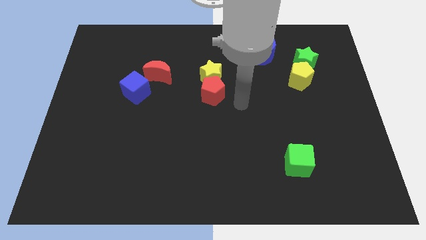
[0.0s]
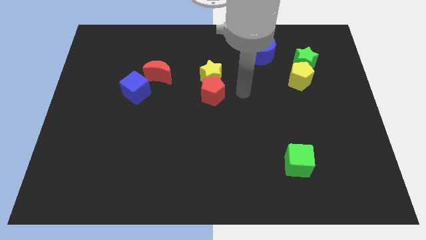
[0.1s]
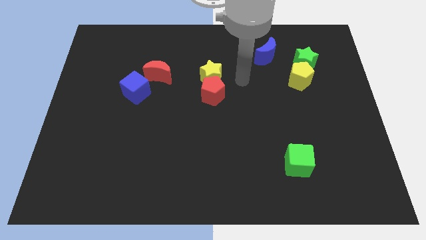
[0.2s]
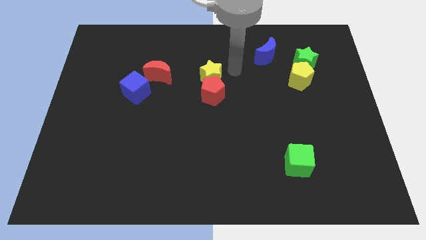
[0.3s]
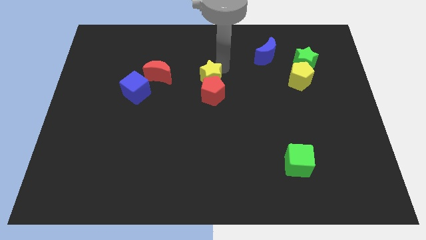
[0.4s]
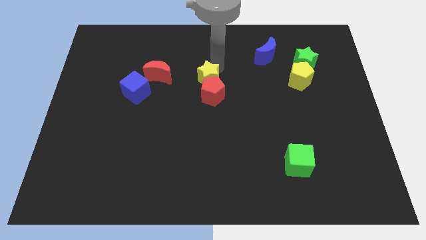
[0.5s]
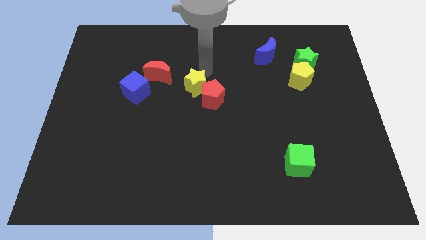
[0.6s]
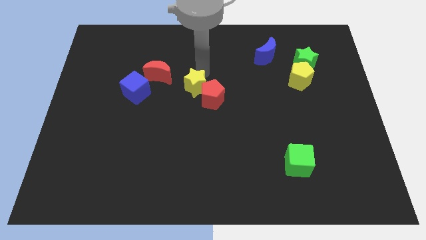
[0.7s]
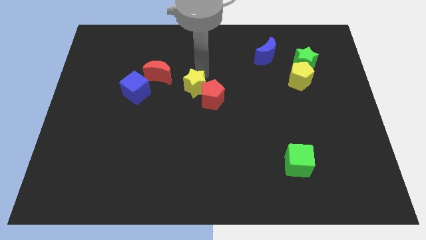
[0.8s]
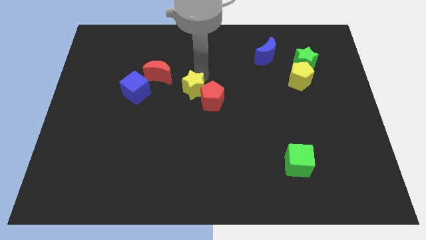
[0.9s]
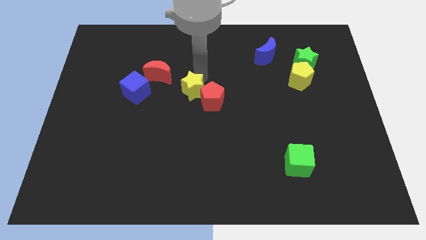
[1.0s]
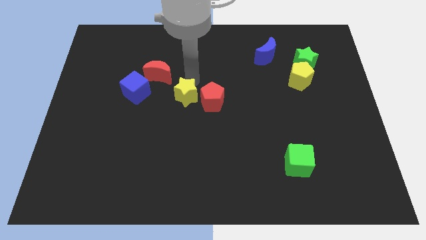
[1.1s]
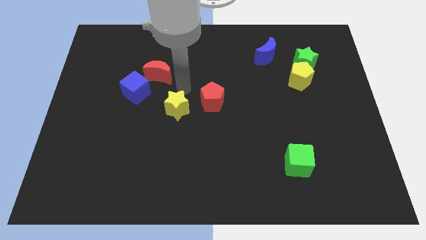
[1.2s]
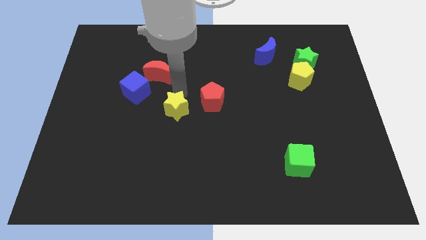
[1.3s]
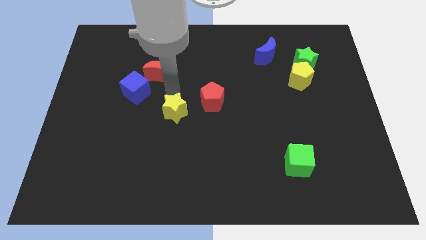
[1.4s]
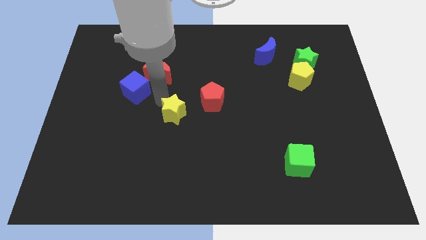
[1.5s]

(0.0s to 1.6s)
push the yellow star to the bottom of the boardslightly

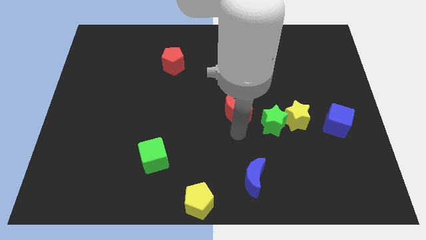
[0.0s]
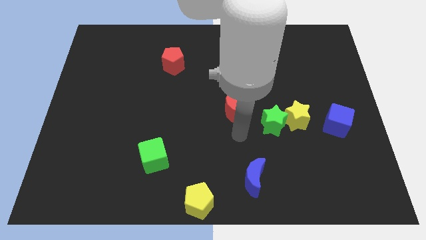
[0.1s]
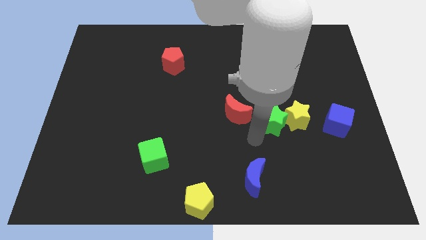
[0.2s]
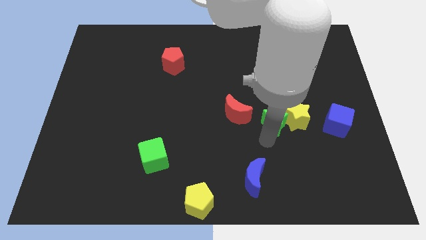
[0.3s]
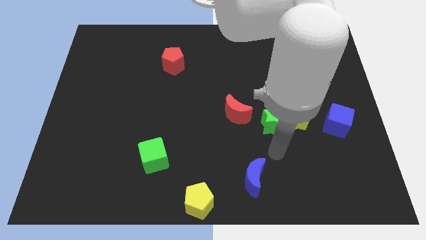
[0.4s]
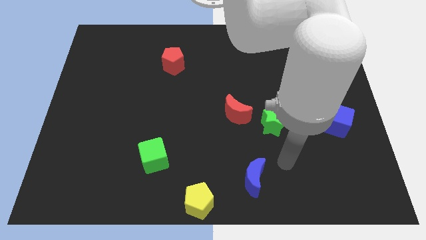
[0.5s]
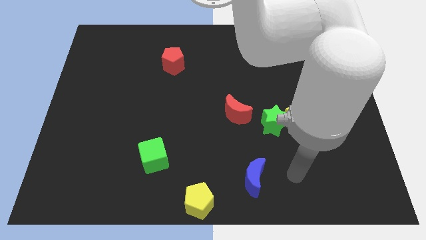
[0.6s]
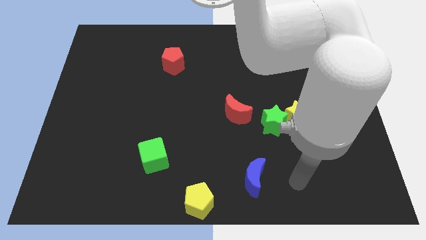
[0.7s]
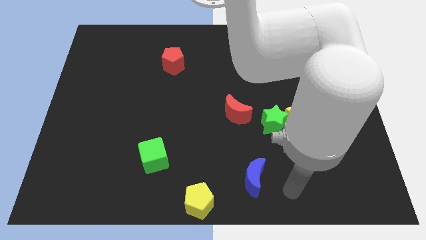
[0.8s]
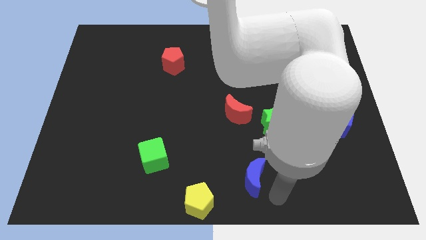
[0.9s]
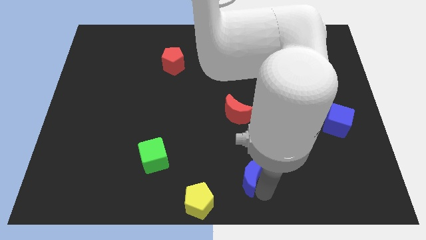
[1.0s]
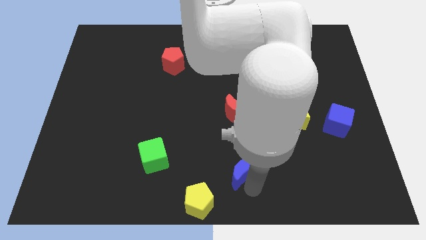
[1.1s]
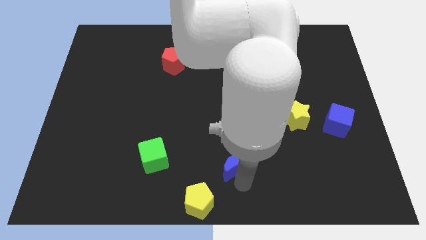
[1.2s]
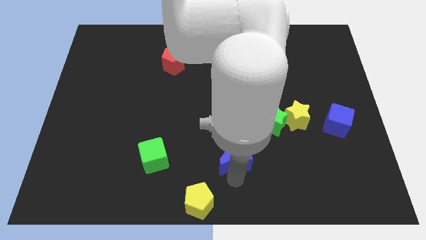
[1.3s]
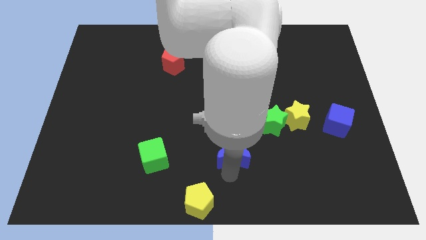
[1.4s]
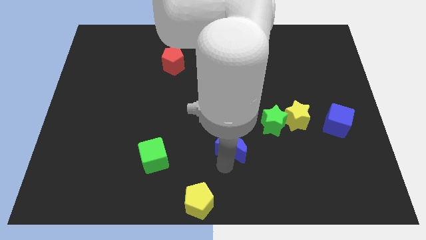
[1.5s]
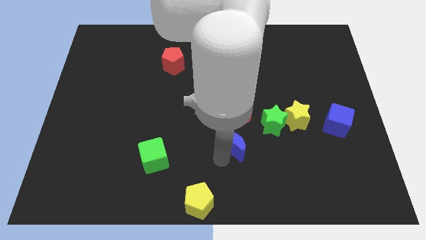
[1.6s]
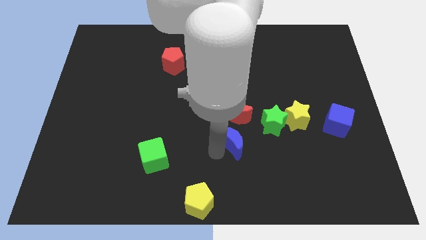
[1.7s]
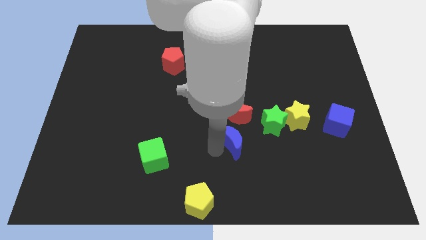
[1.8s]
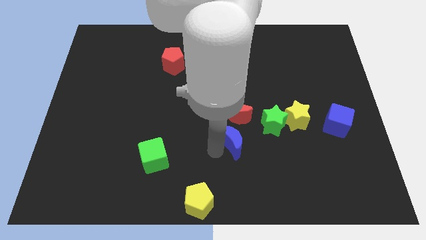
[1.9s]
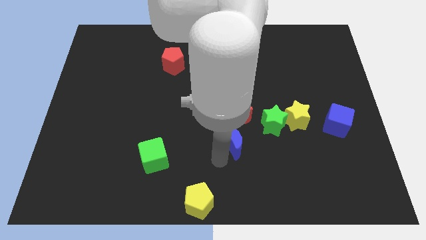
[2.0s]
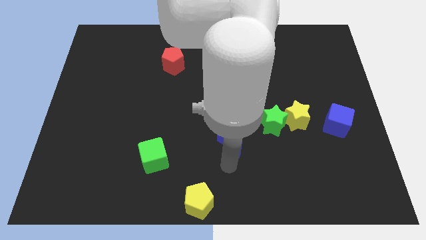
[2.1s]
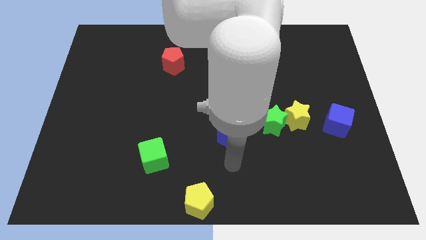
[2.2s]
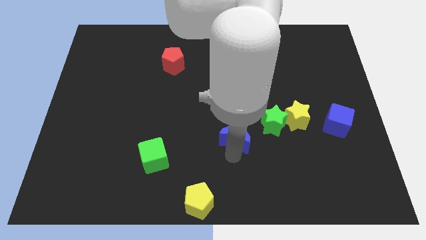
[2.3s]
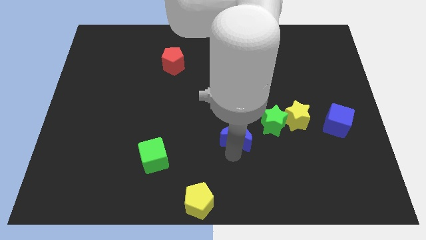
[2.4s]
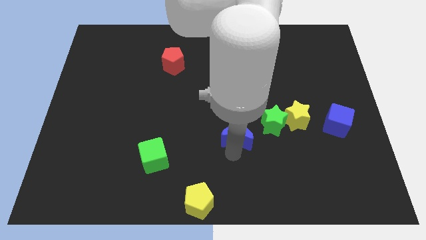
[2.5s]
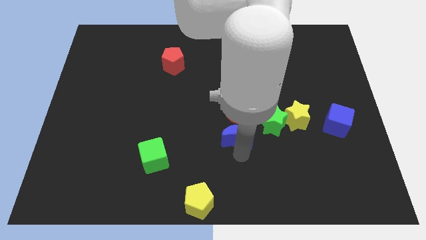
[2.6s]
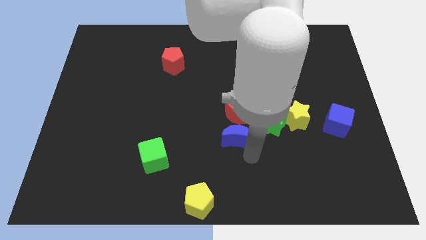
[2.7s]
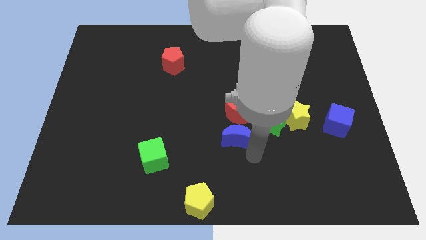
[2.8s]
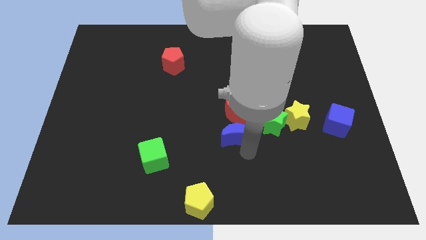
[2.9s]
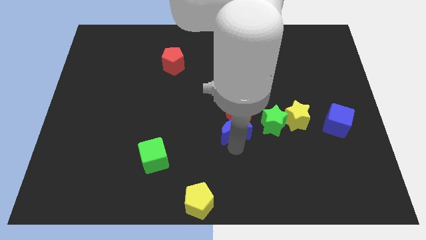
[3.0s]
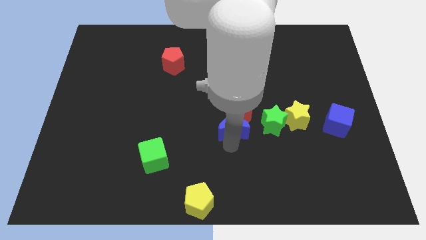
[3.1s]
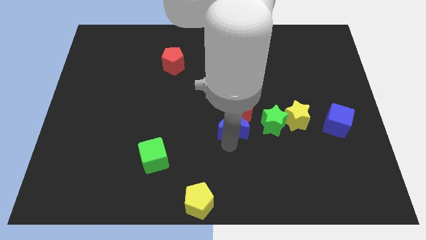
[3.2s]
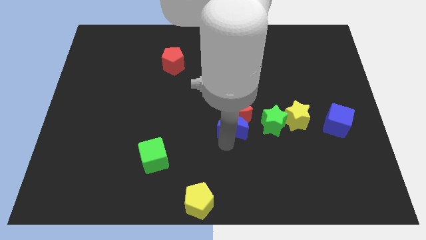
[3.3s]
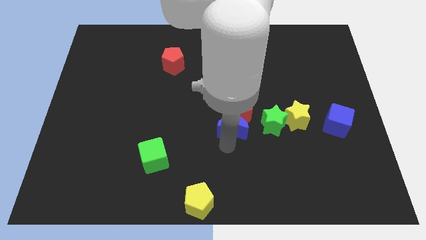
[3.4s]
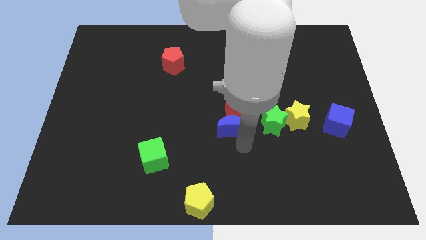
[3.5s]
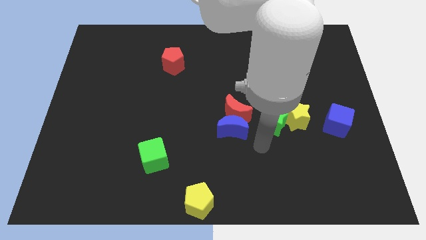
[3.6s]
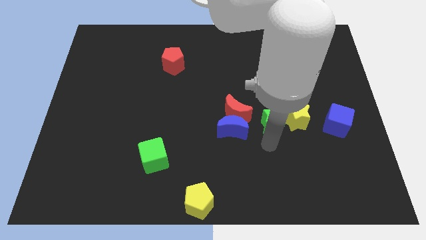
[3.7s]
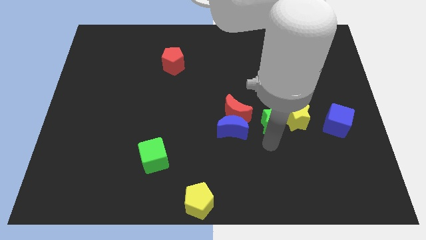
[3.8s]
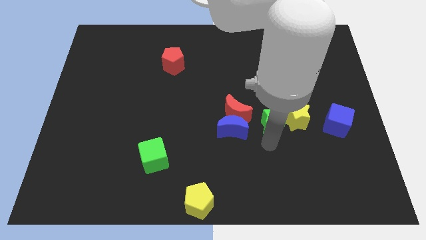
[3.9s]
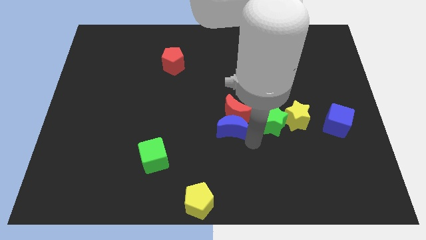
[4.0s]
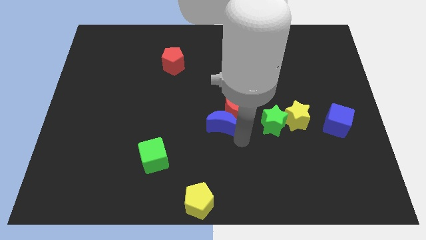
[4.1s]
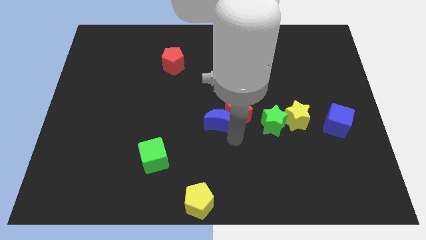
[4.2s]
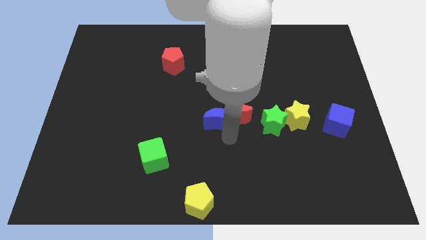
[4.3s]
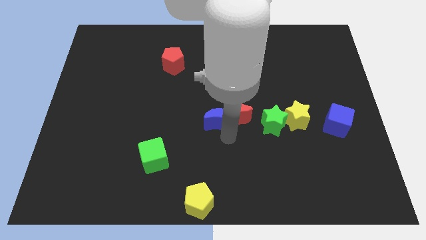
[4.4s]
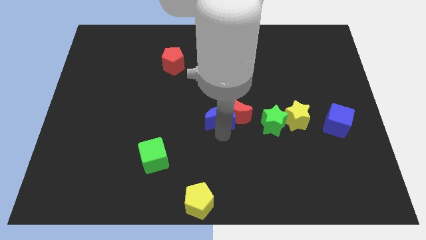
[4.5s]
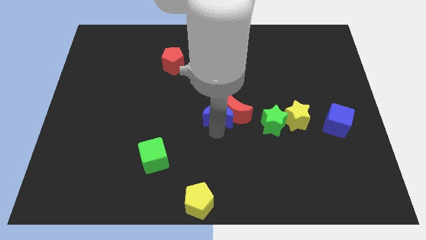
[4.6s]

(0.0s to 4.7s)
push the blue moon into the red moon

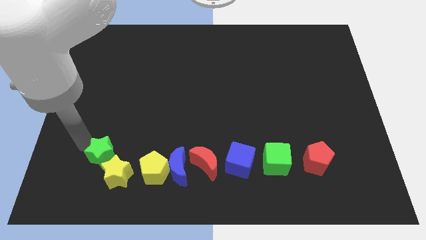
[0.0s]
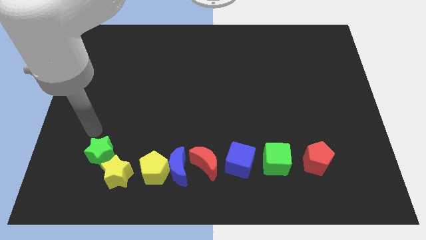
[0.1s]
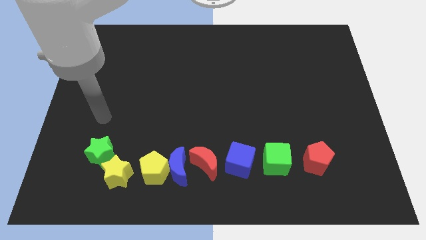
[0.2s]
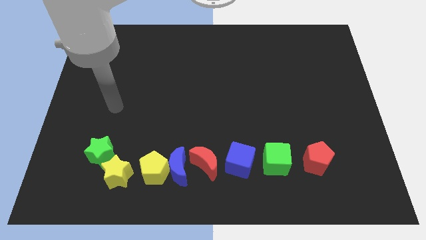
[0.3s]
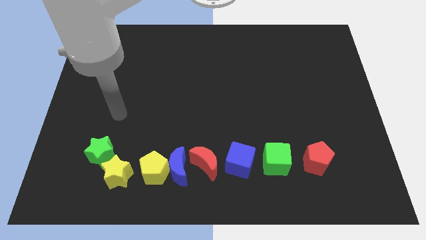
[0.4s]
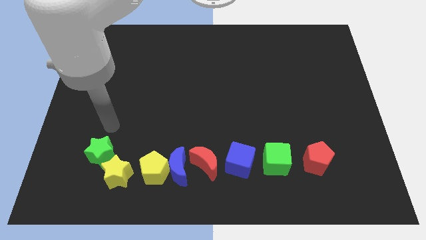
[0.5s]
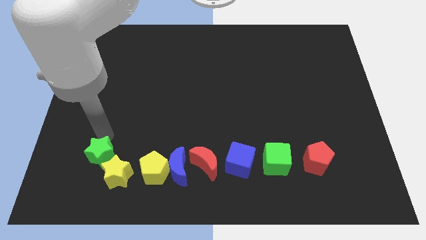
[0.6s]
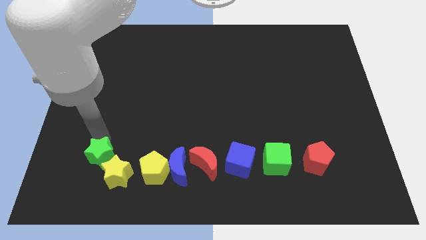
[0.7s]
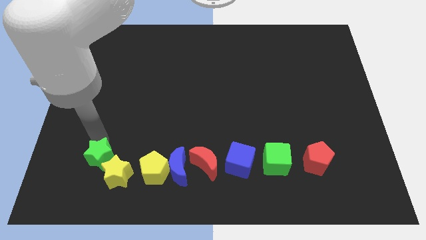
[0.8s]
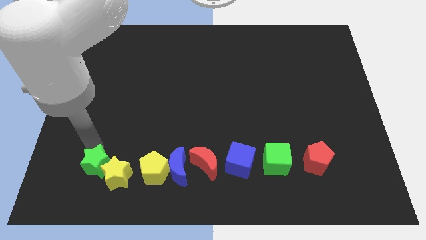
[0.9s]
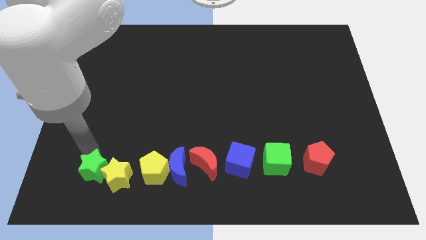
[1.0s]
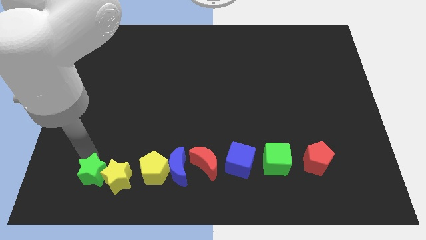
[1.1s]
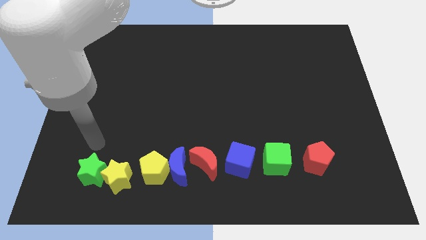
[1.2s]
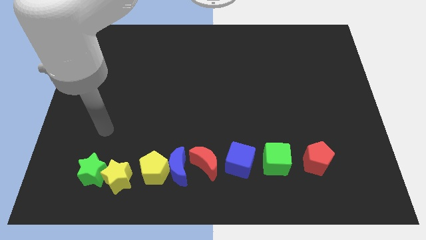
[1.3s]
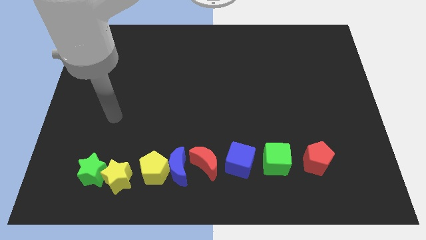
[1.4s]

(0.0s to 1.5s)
push the green star to the left of the yellow star

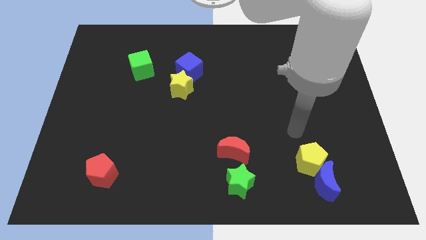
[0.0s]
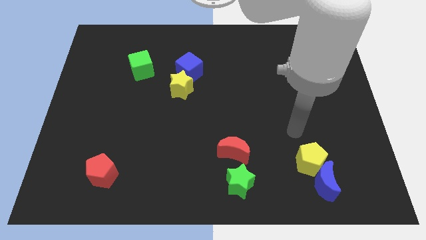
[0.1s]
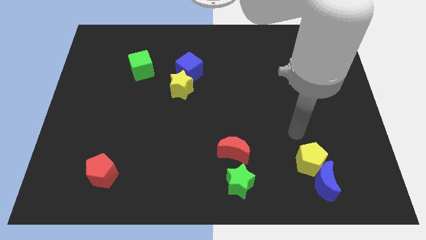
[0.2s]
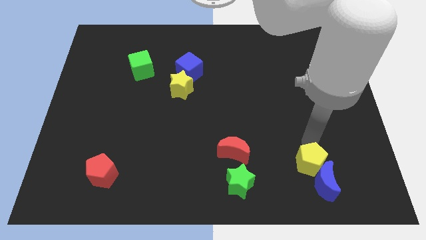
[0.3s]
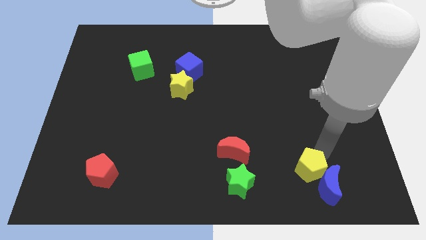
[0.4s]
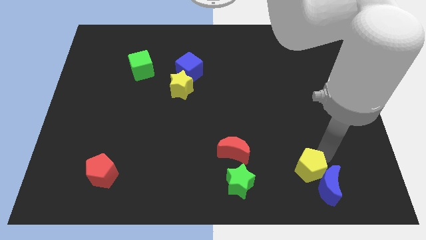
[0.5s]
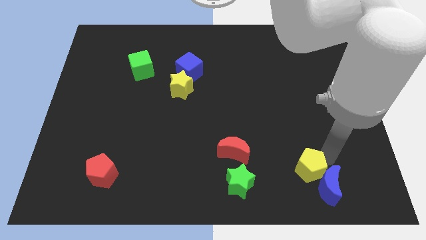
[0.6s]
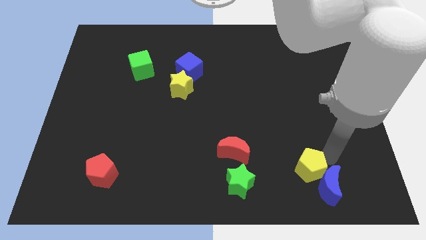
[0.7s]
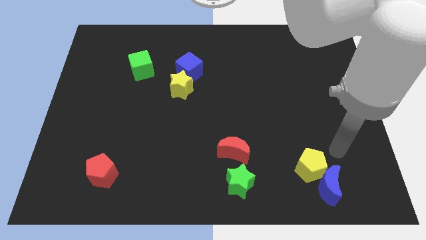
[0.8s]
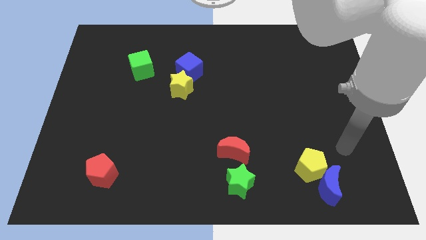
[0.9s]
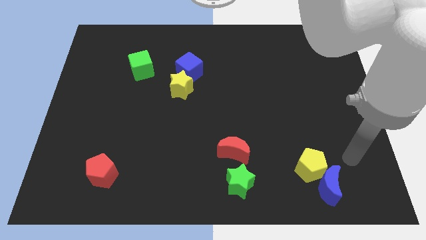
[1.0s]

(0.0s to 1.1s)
move the yellow pentagon slightly downwards
